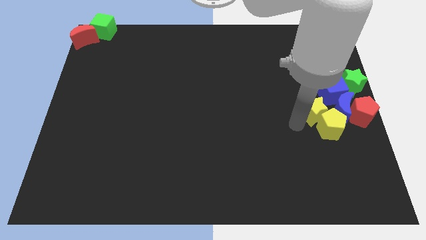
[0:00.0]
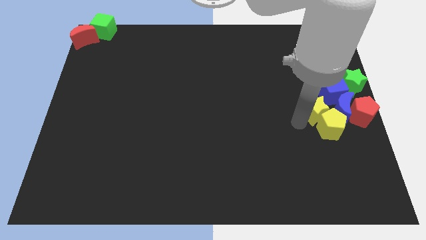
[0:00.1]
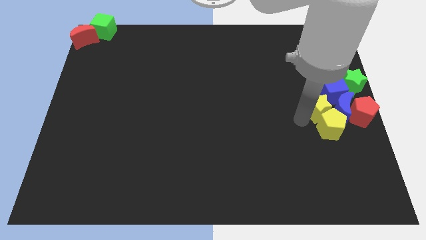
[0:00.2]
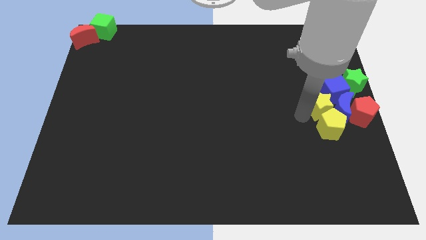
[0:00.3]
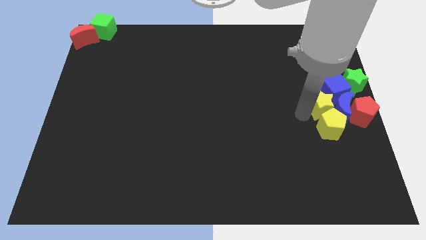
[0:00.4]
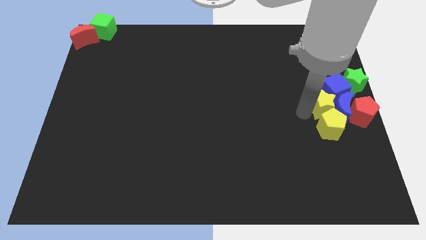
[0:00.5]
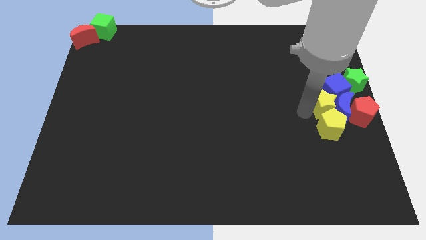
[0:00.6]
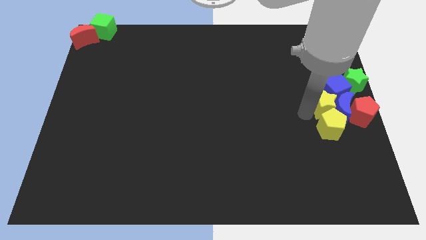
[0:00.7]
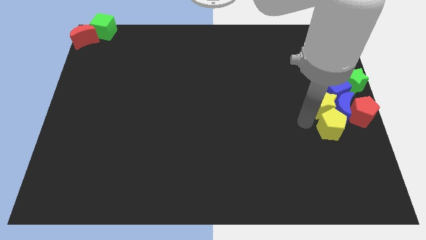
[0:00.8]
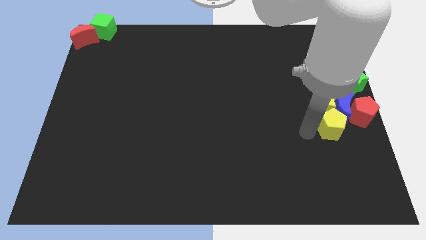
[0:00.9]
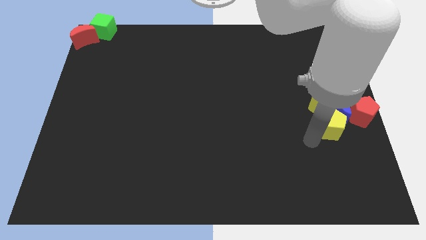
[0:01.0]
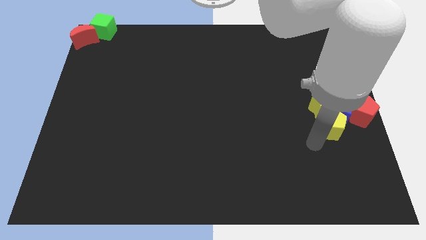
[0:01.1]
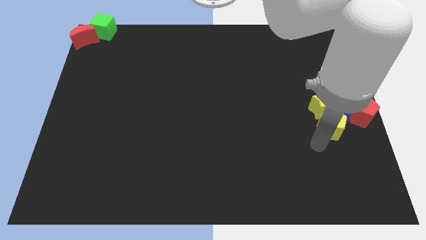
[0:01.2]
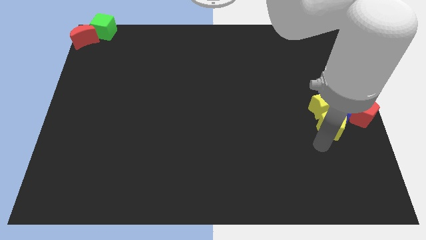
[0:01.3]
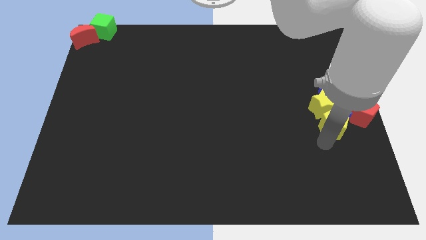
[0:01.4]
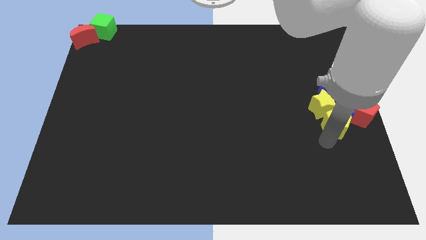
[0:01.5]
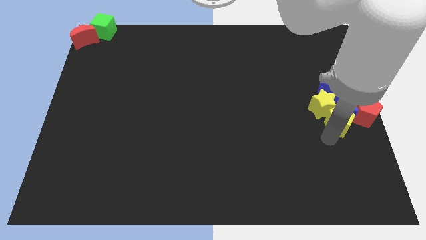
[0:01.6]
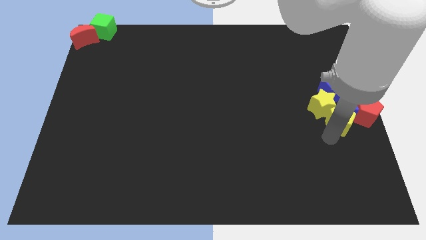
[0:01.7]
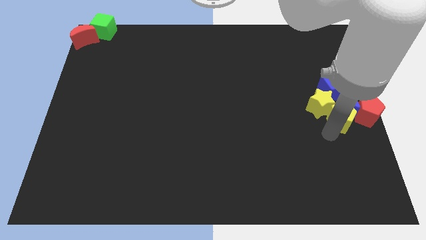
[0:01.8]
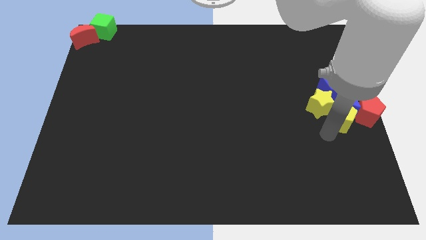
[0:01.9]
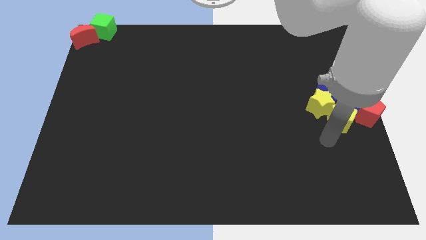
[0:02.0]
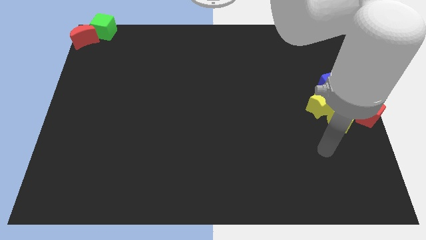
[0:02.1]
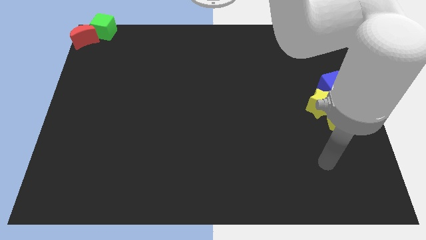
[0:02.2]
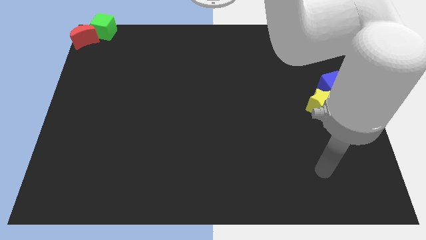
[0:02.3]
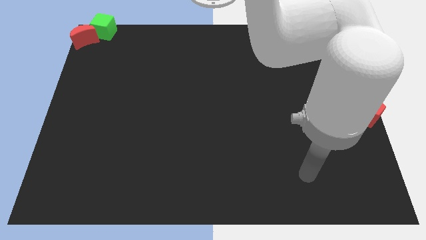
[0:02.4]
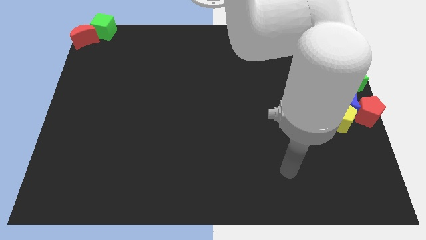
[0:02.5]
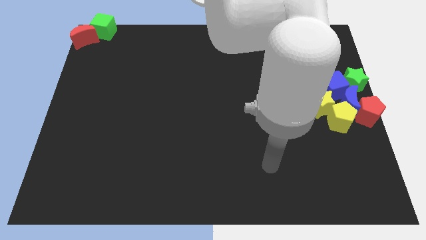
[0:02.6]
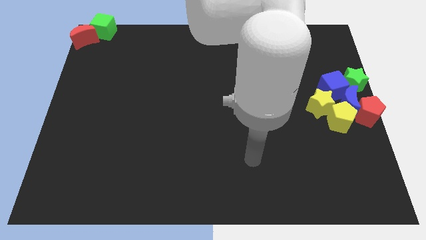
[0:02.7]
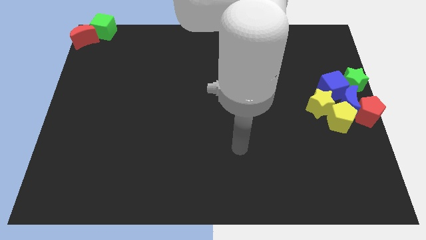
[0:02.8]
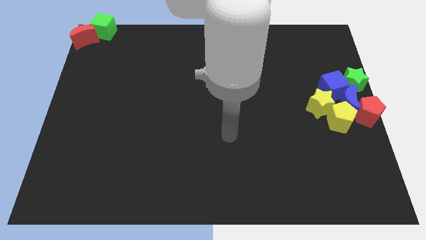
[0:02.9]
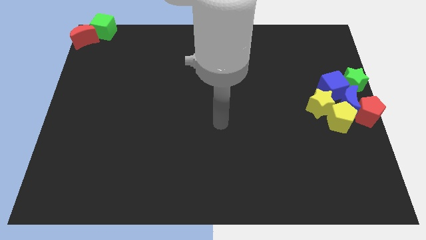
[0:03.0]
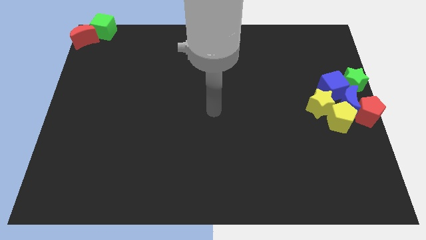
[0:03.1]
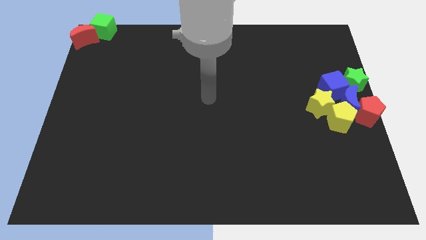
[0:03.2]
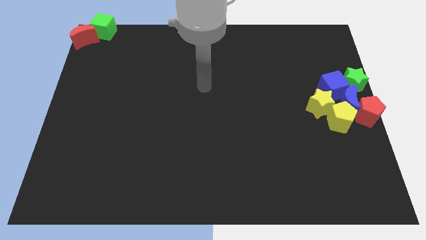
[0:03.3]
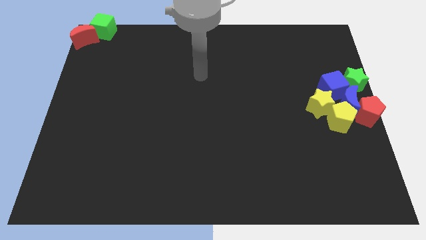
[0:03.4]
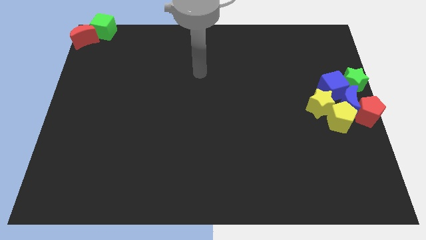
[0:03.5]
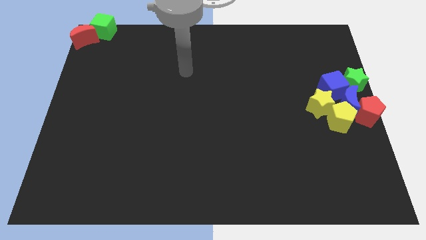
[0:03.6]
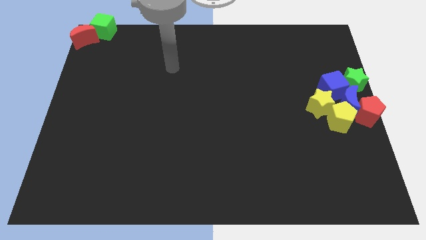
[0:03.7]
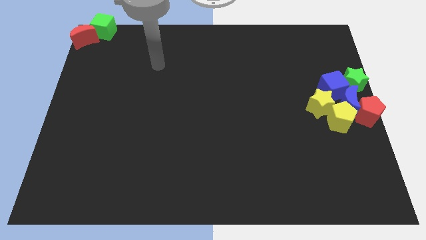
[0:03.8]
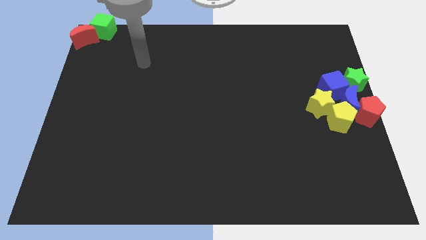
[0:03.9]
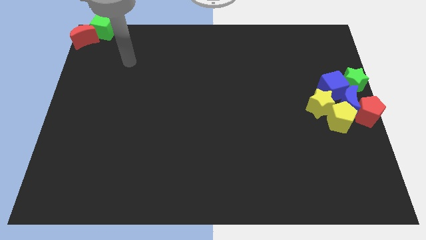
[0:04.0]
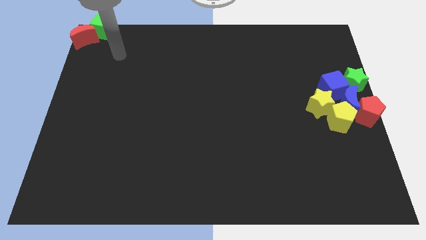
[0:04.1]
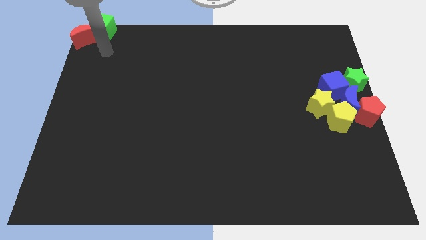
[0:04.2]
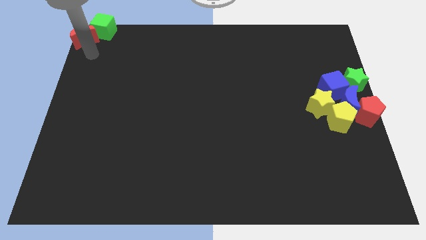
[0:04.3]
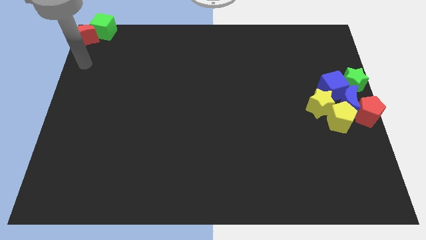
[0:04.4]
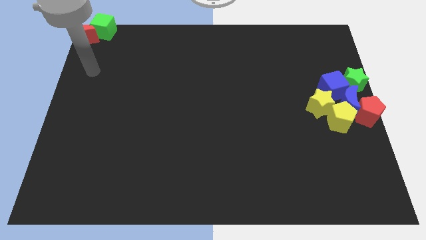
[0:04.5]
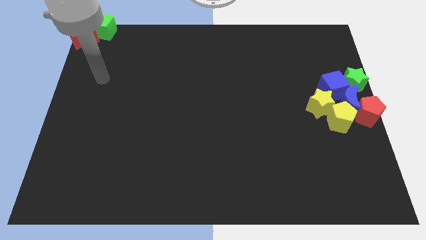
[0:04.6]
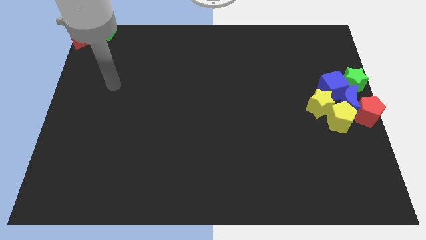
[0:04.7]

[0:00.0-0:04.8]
move the yellow blocks to the group of blocks

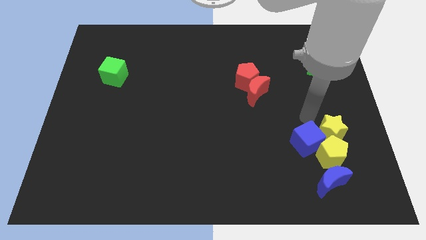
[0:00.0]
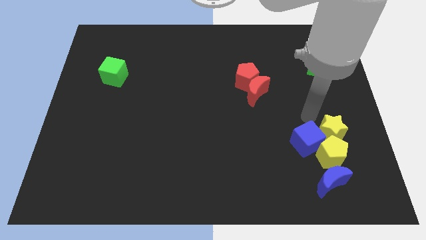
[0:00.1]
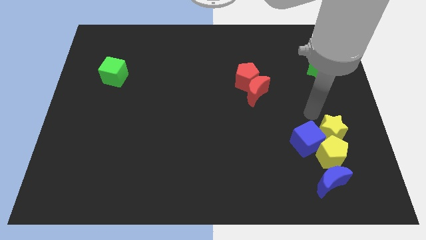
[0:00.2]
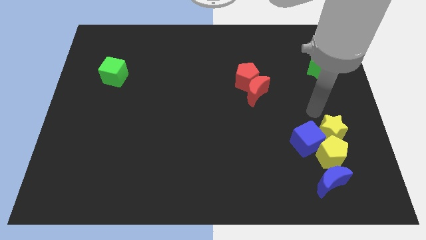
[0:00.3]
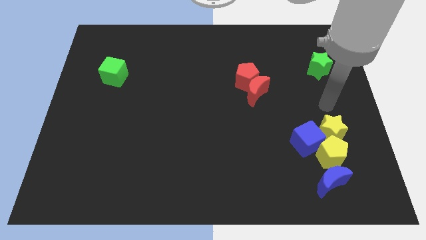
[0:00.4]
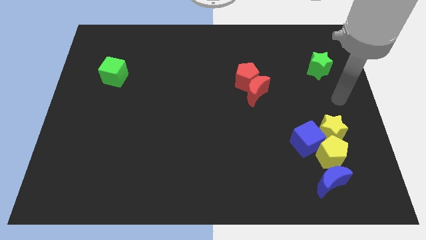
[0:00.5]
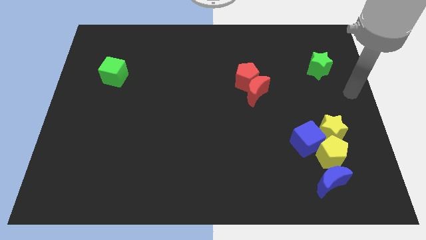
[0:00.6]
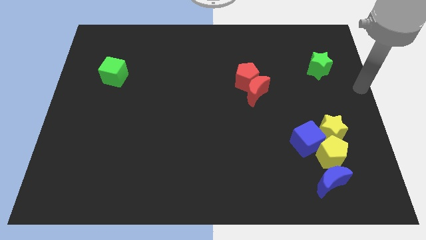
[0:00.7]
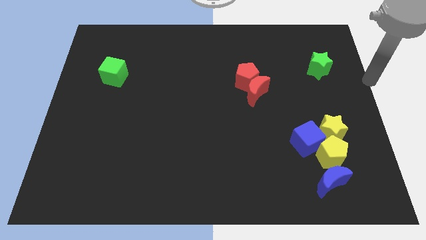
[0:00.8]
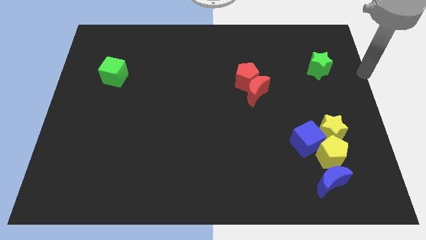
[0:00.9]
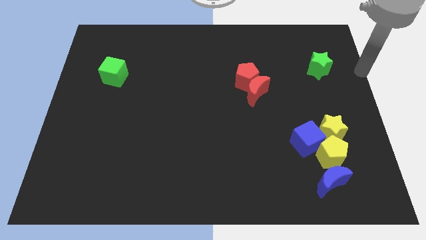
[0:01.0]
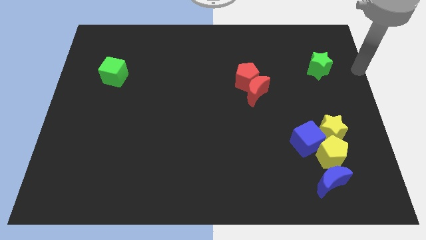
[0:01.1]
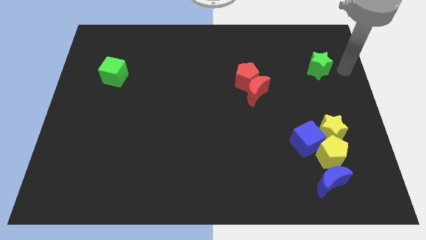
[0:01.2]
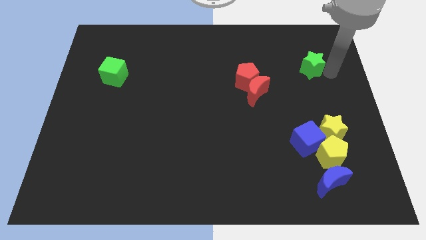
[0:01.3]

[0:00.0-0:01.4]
move your arm towards green star

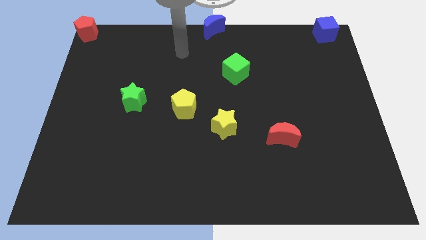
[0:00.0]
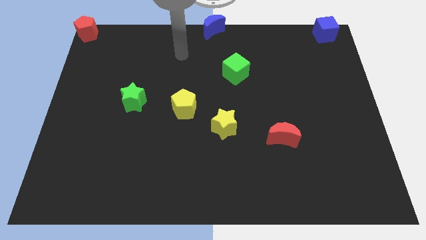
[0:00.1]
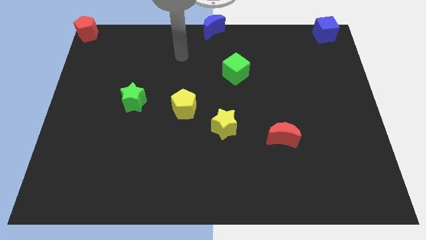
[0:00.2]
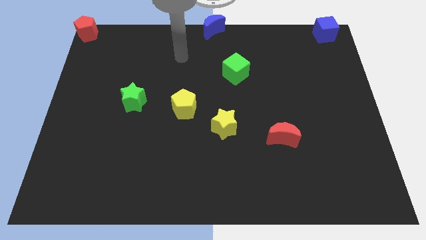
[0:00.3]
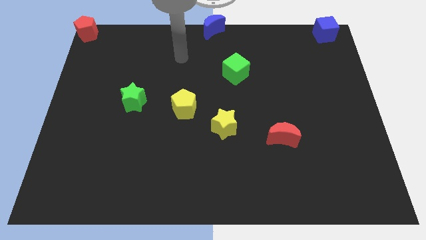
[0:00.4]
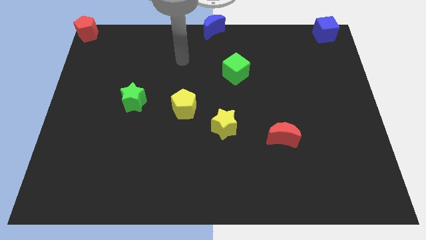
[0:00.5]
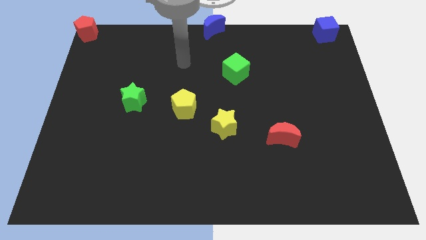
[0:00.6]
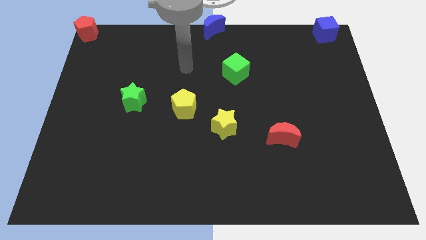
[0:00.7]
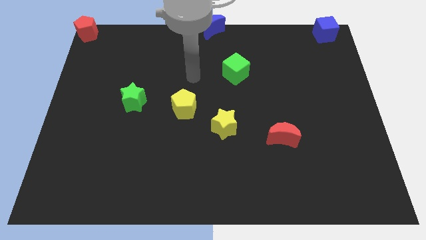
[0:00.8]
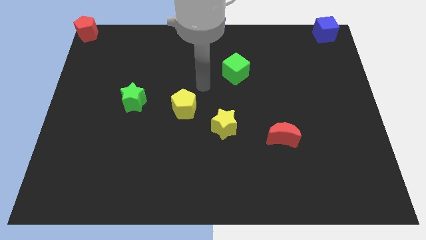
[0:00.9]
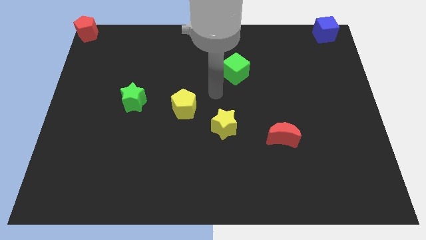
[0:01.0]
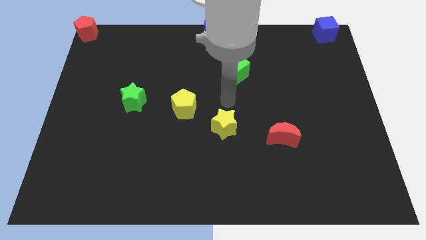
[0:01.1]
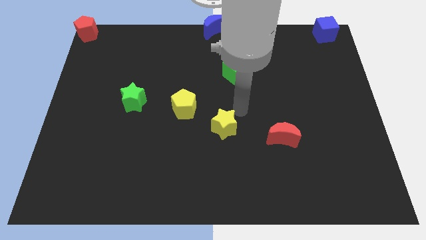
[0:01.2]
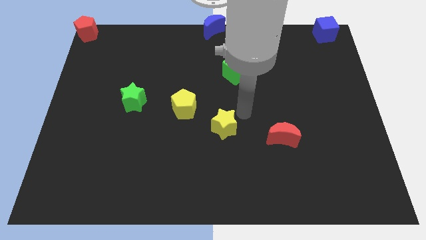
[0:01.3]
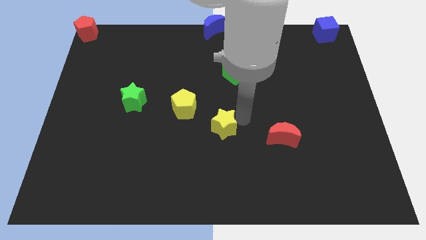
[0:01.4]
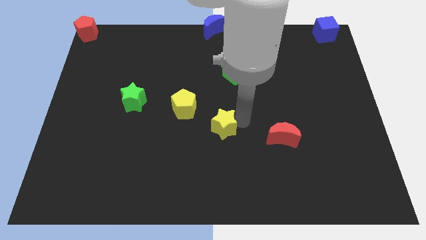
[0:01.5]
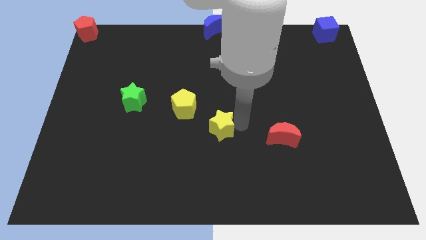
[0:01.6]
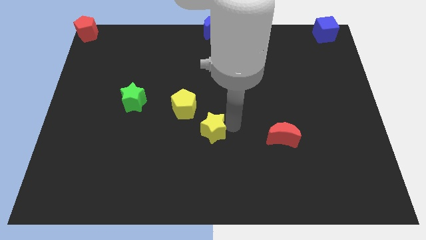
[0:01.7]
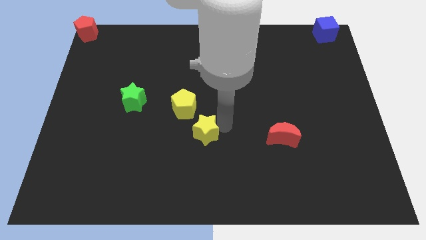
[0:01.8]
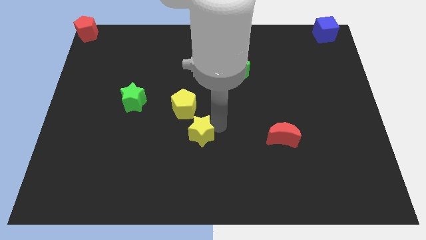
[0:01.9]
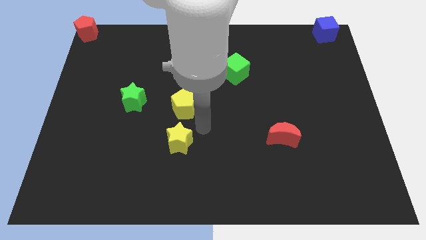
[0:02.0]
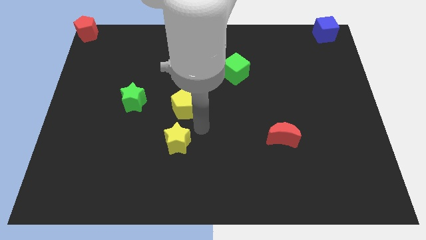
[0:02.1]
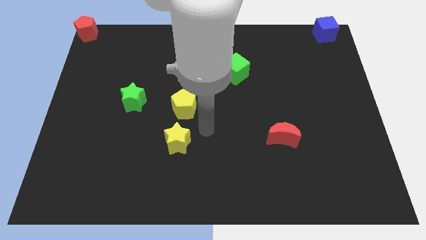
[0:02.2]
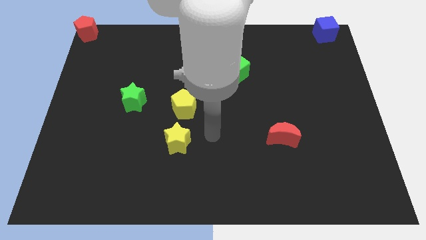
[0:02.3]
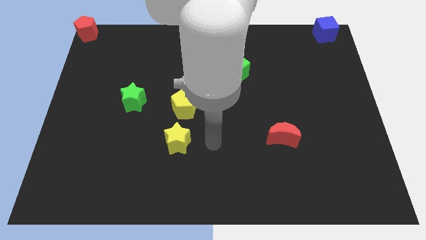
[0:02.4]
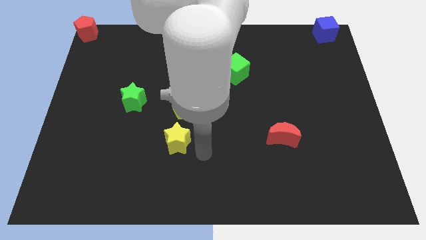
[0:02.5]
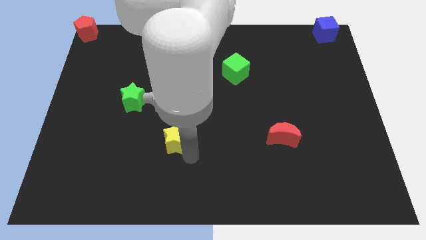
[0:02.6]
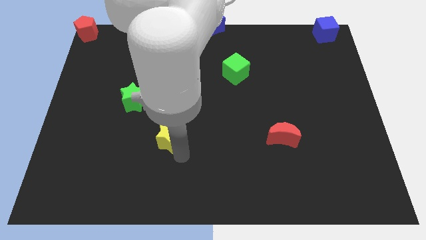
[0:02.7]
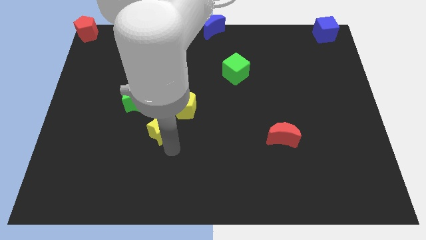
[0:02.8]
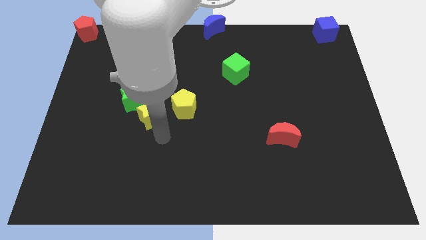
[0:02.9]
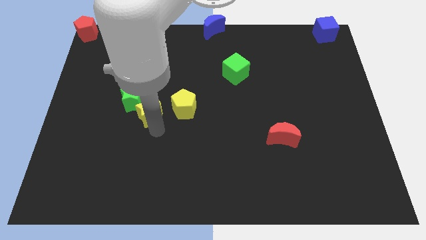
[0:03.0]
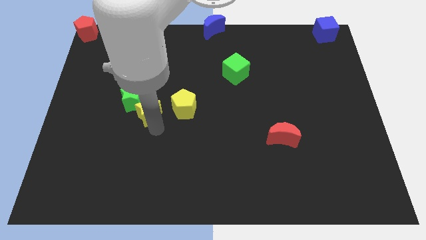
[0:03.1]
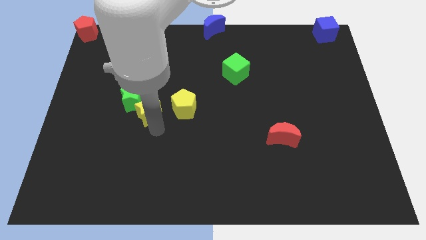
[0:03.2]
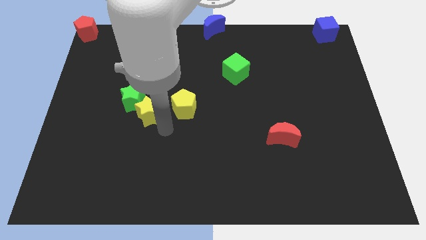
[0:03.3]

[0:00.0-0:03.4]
push the yellow star into the green star
